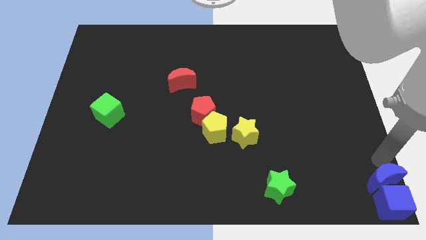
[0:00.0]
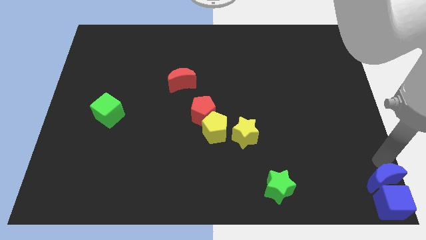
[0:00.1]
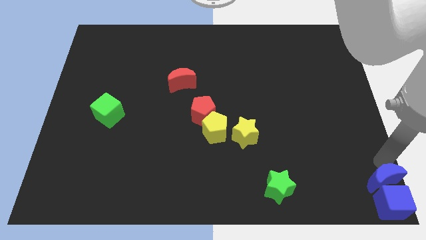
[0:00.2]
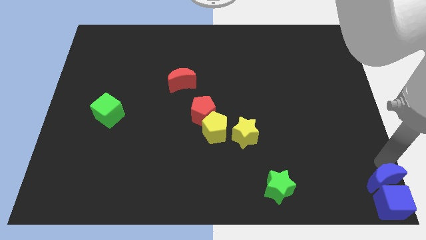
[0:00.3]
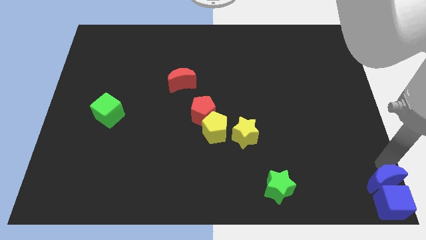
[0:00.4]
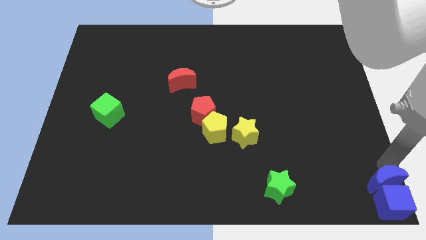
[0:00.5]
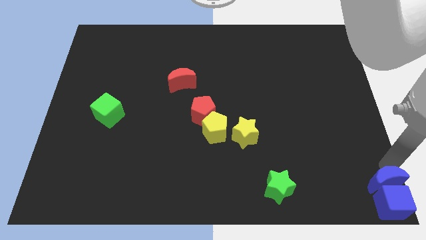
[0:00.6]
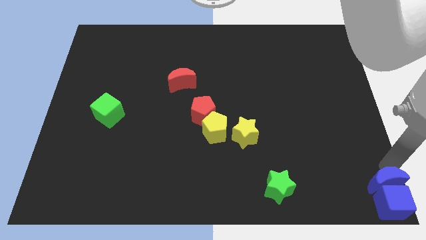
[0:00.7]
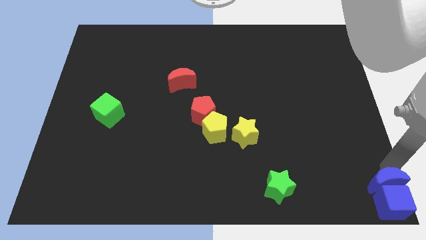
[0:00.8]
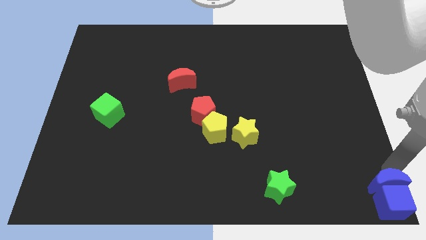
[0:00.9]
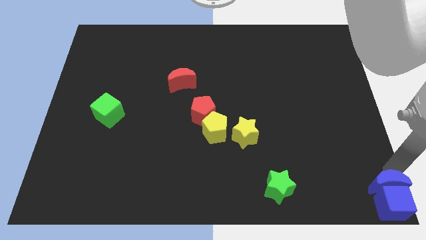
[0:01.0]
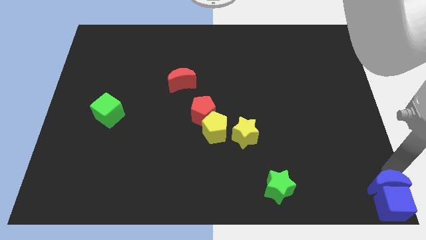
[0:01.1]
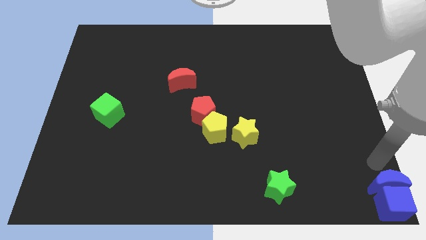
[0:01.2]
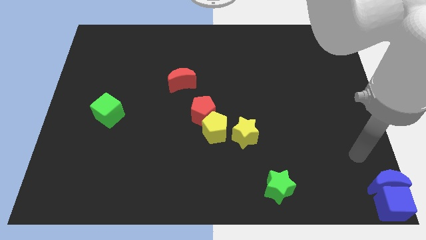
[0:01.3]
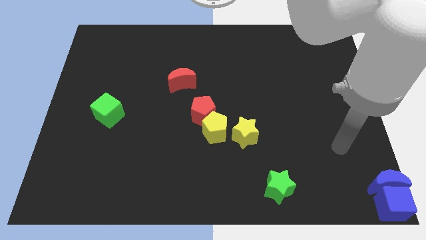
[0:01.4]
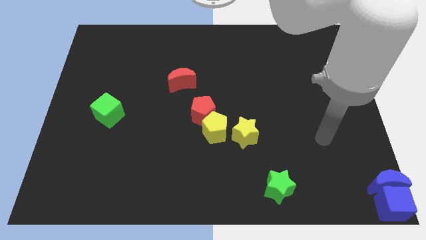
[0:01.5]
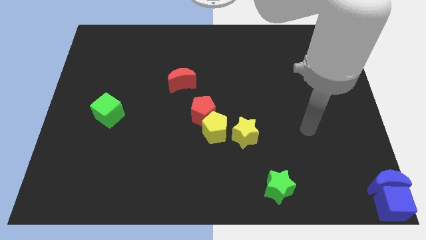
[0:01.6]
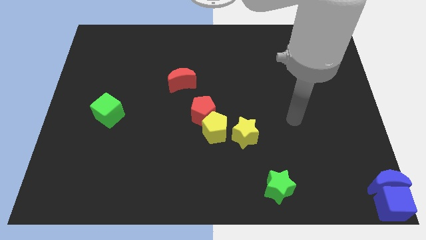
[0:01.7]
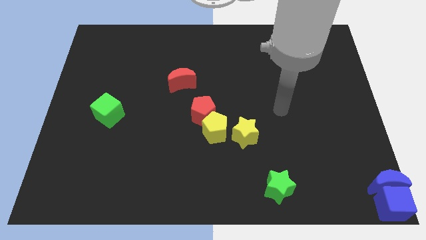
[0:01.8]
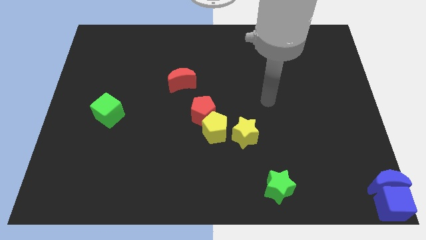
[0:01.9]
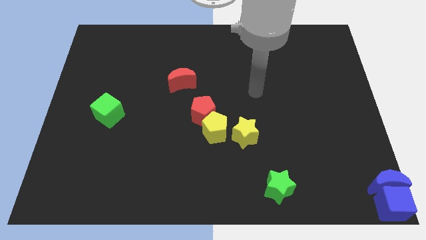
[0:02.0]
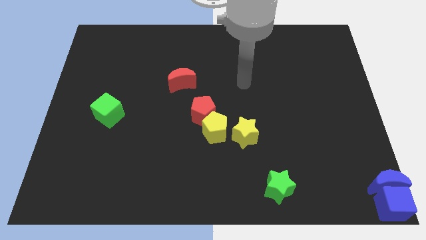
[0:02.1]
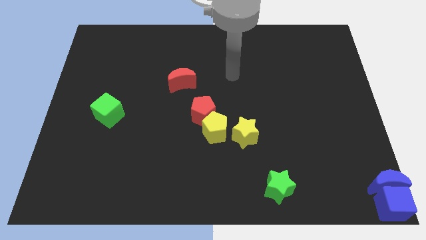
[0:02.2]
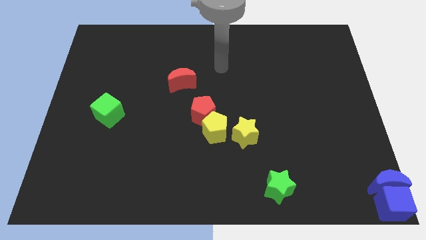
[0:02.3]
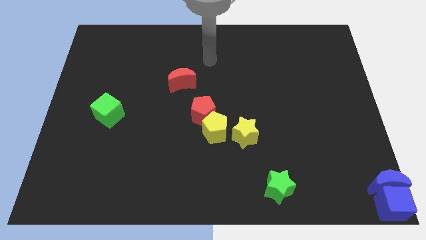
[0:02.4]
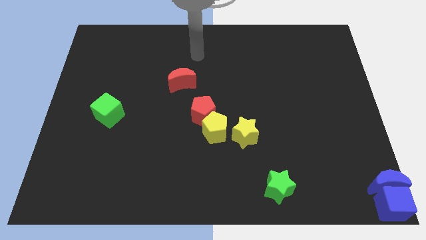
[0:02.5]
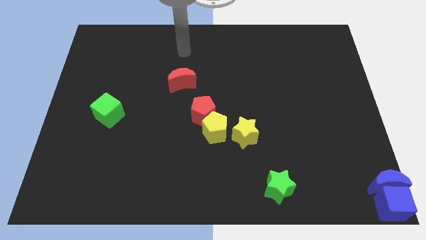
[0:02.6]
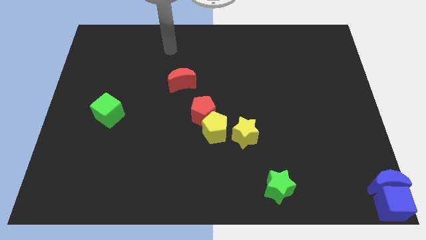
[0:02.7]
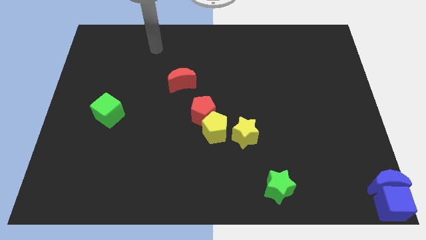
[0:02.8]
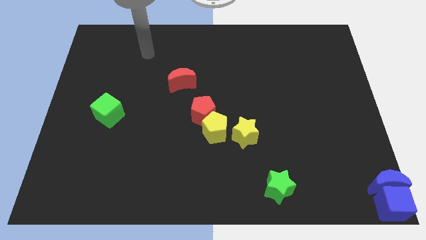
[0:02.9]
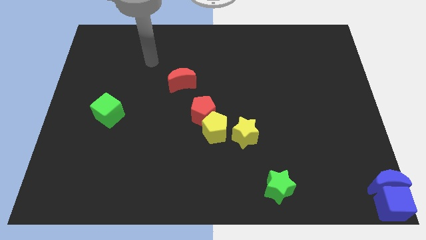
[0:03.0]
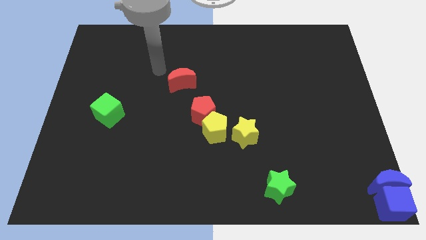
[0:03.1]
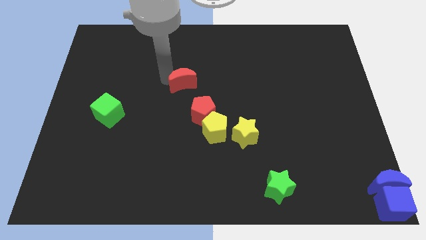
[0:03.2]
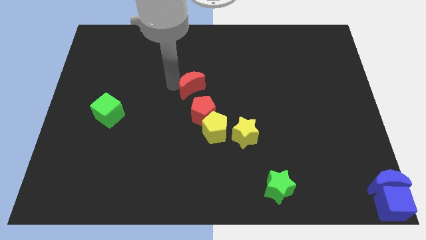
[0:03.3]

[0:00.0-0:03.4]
point your arm above red moon

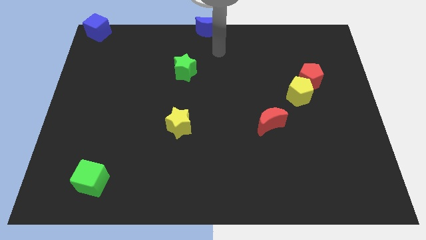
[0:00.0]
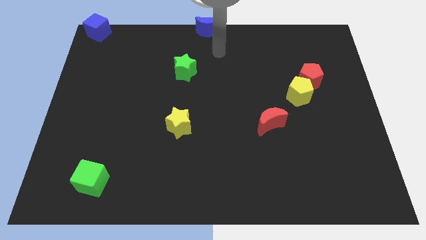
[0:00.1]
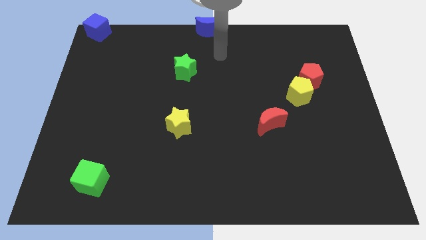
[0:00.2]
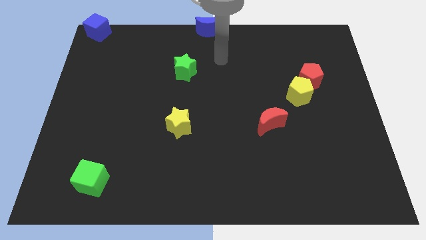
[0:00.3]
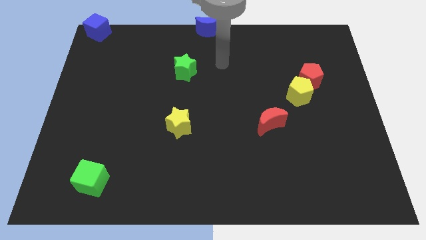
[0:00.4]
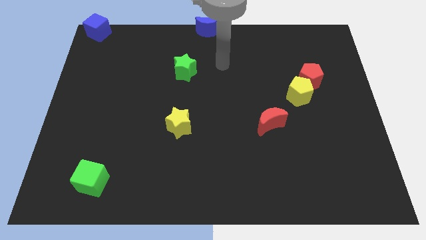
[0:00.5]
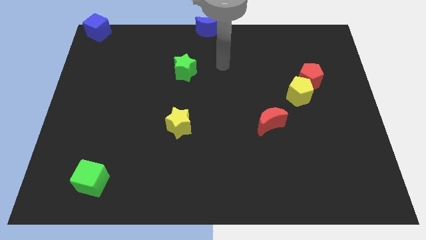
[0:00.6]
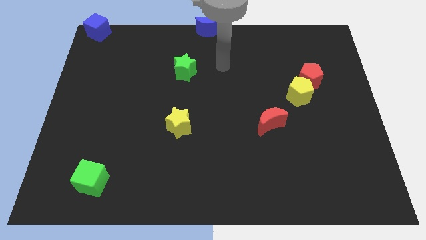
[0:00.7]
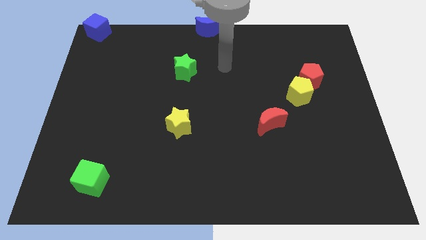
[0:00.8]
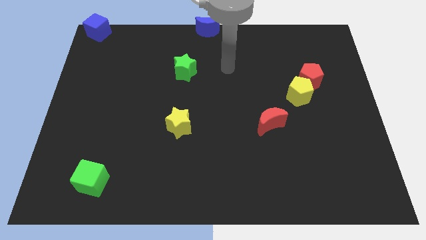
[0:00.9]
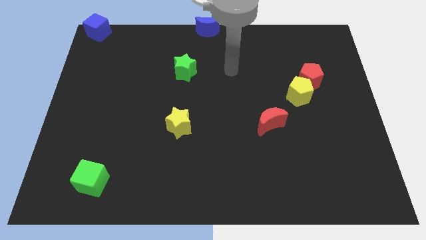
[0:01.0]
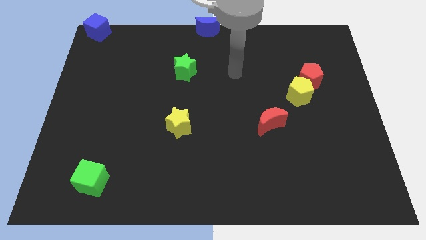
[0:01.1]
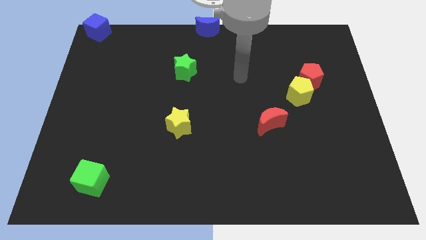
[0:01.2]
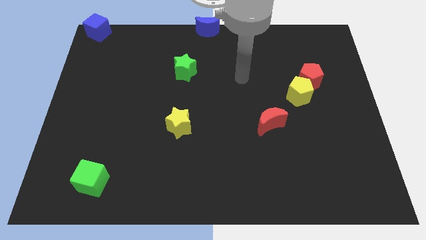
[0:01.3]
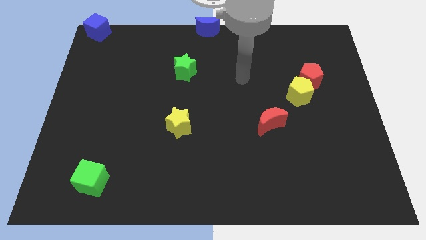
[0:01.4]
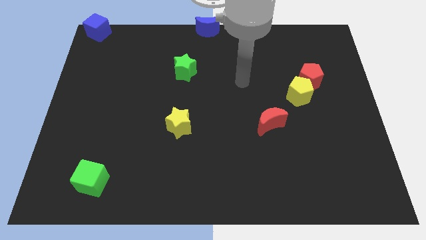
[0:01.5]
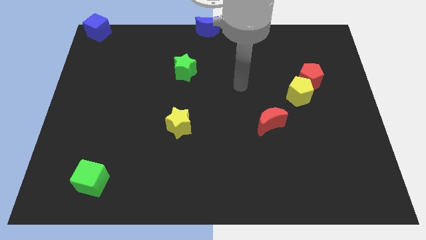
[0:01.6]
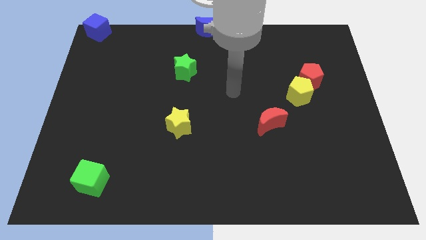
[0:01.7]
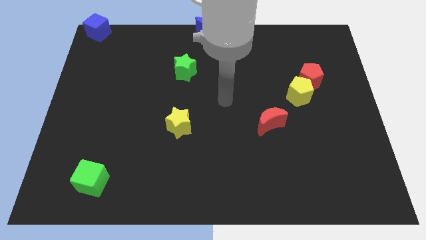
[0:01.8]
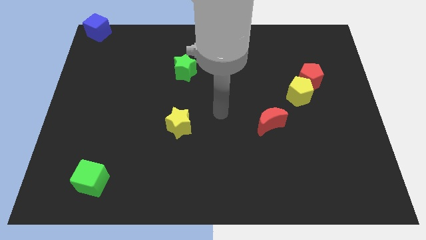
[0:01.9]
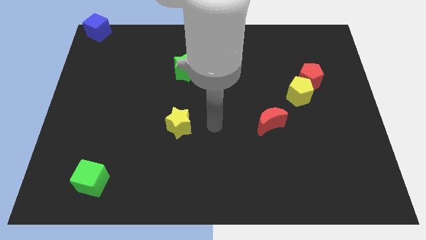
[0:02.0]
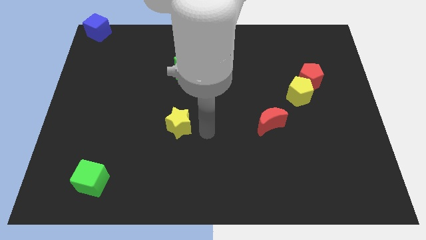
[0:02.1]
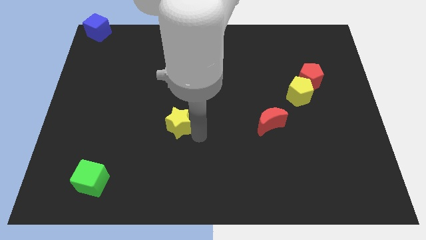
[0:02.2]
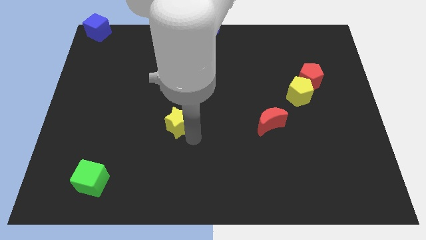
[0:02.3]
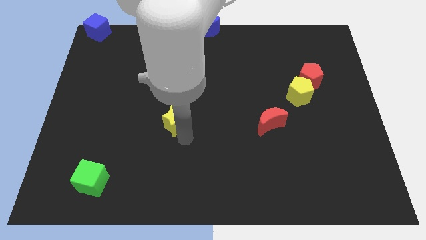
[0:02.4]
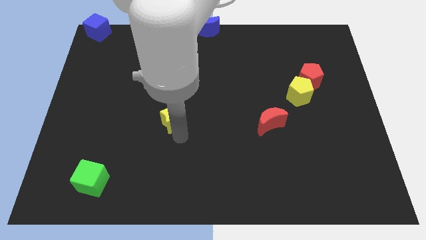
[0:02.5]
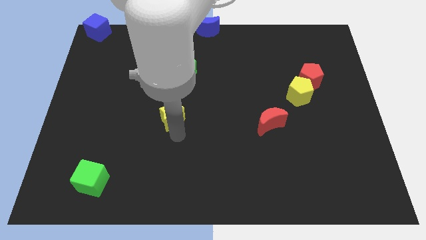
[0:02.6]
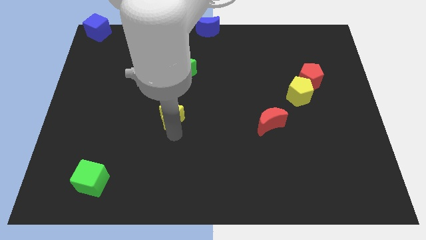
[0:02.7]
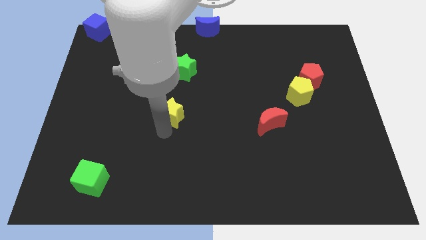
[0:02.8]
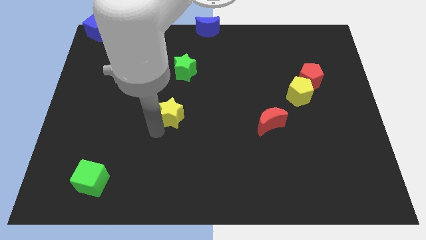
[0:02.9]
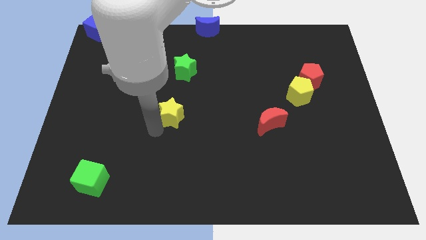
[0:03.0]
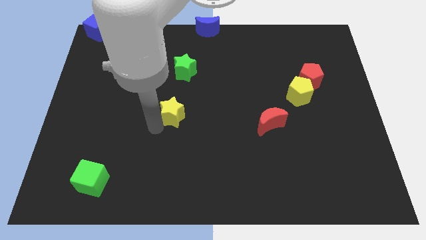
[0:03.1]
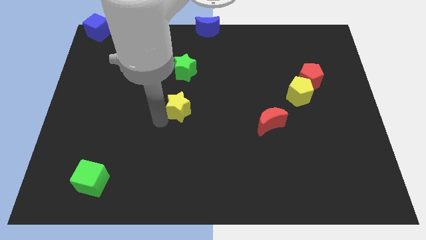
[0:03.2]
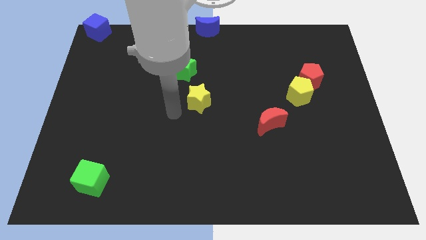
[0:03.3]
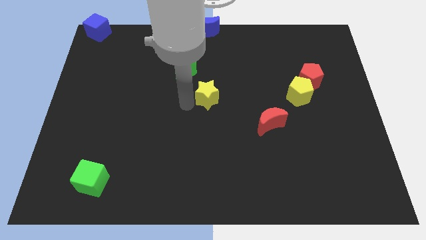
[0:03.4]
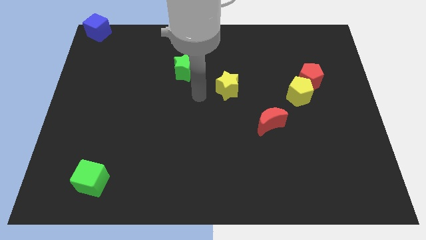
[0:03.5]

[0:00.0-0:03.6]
place the yellow star diagonally in between the green star and red crescent

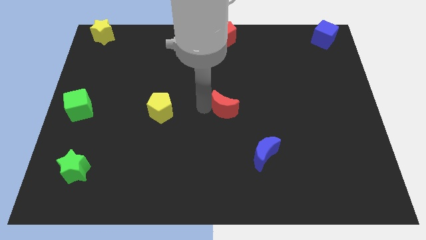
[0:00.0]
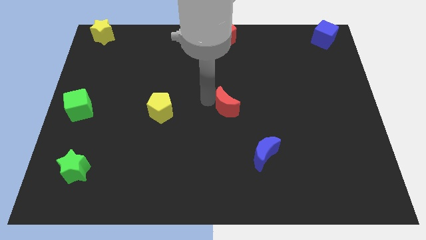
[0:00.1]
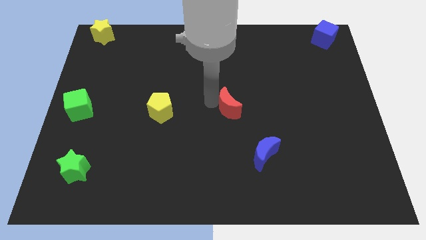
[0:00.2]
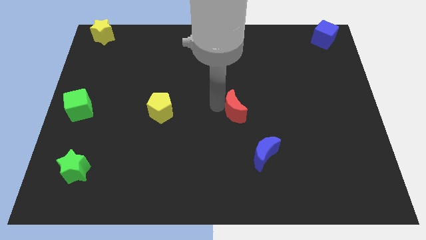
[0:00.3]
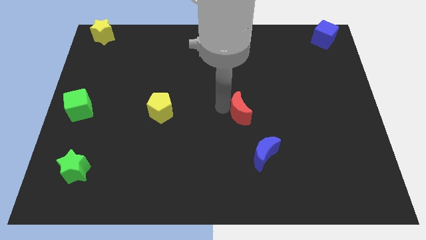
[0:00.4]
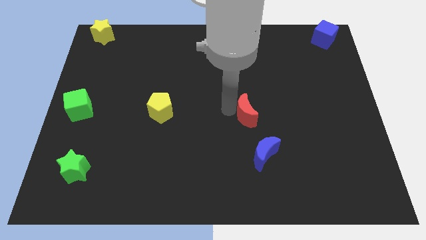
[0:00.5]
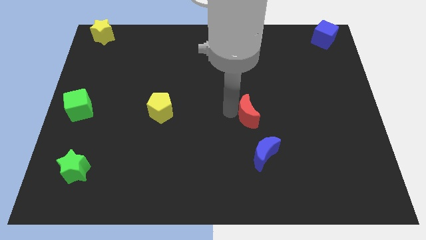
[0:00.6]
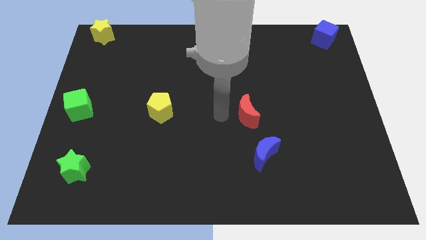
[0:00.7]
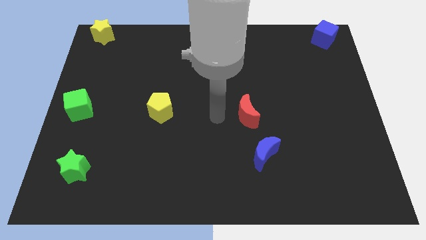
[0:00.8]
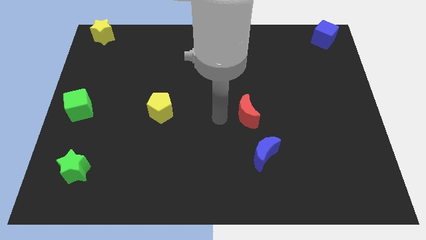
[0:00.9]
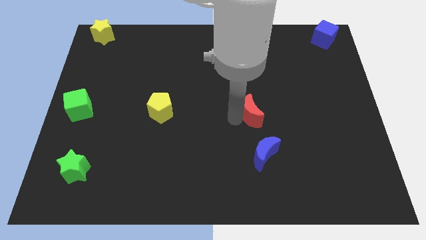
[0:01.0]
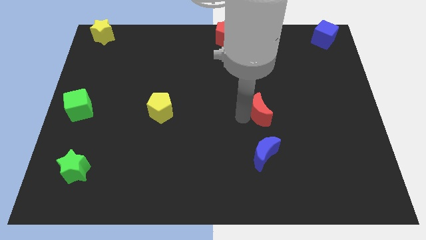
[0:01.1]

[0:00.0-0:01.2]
place the red moon above the blue moon

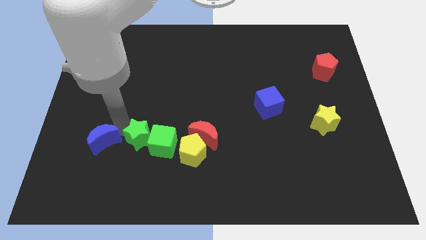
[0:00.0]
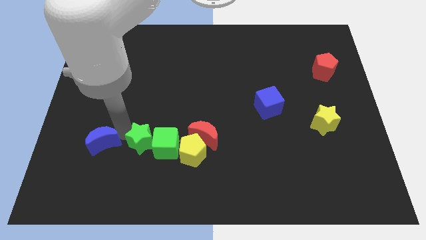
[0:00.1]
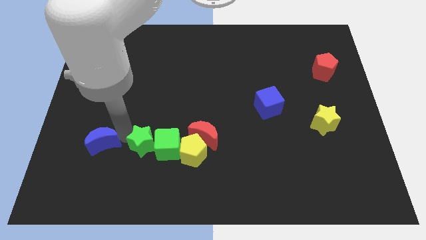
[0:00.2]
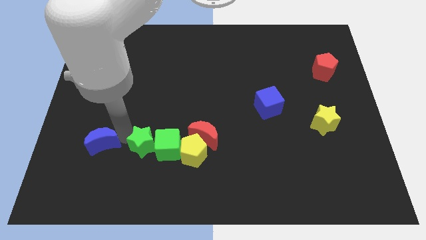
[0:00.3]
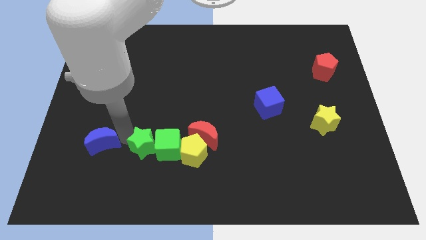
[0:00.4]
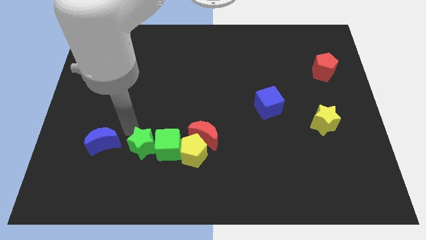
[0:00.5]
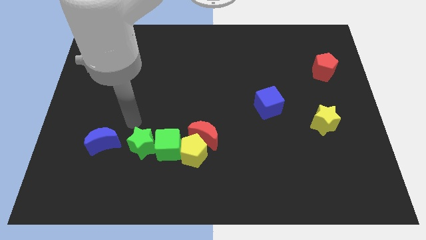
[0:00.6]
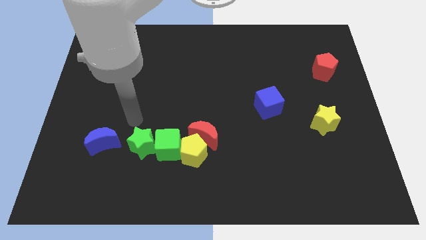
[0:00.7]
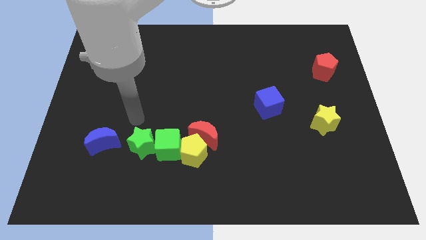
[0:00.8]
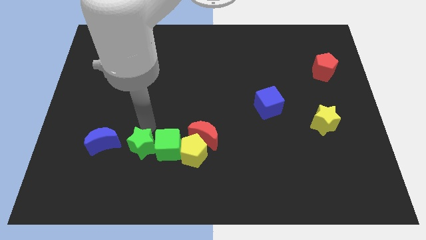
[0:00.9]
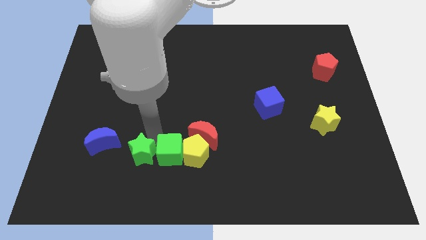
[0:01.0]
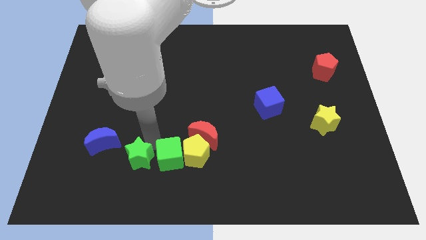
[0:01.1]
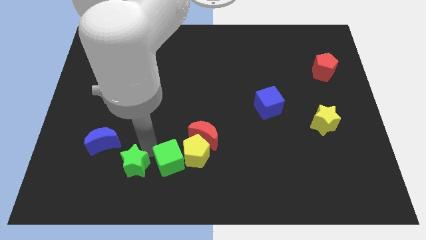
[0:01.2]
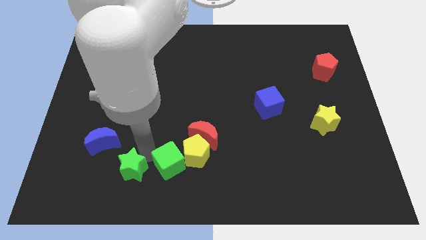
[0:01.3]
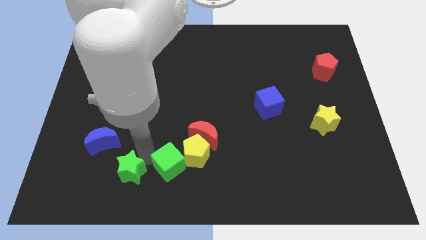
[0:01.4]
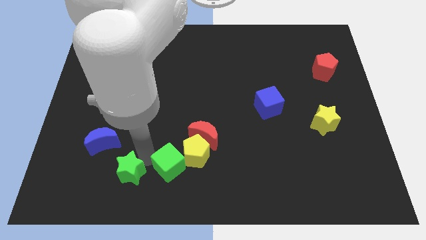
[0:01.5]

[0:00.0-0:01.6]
move the green cube and the green star towards bottom
